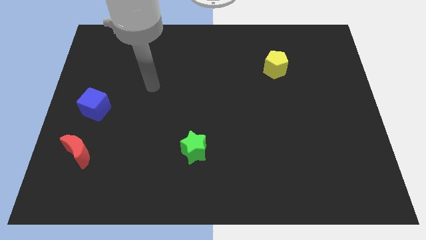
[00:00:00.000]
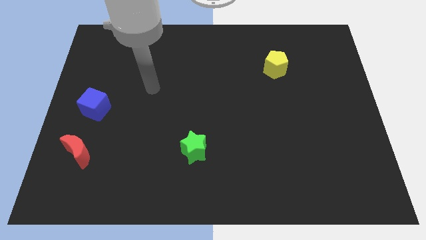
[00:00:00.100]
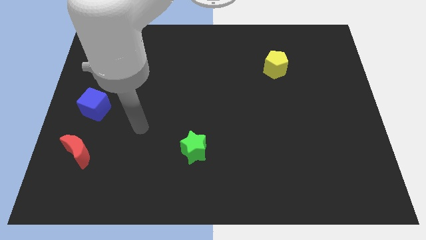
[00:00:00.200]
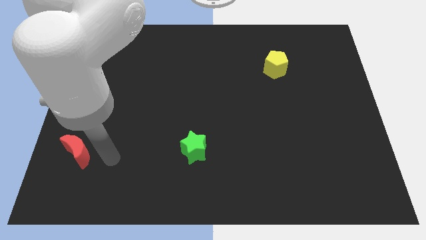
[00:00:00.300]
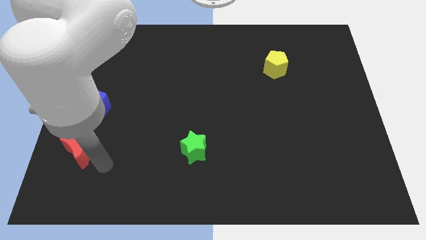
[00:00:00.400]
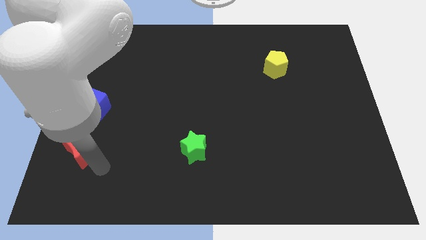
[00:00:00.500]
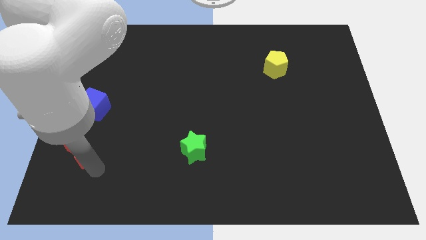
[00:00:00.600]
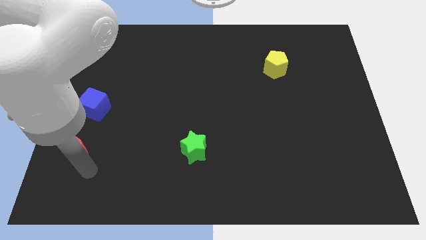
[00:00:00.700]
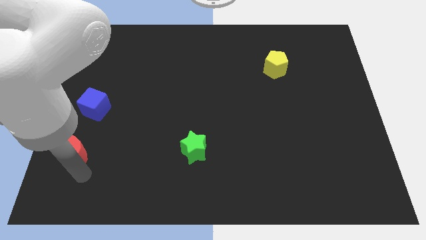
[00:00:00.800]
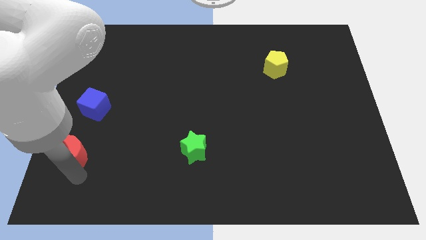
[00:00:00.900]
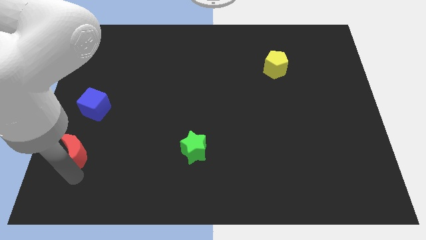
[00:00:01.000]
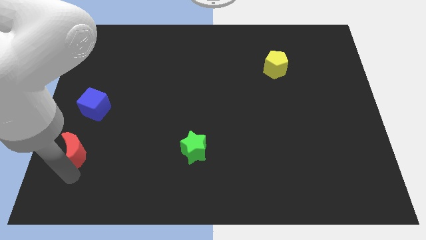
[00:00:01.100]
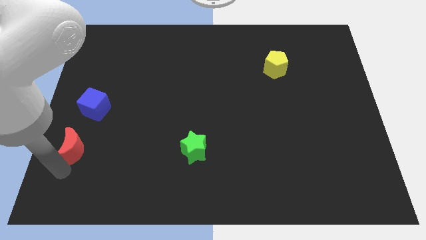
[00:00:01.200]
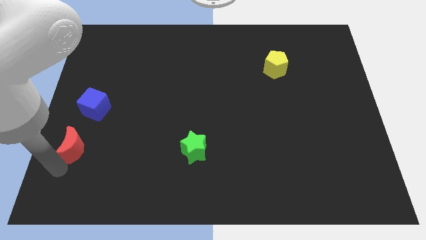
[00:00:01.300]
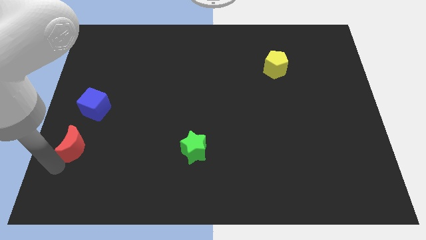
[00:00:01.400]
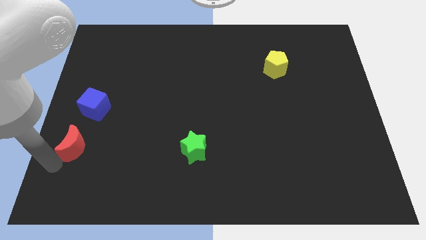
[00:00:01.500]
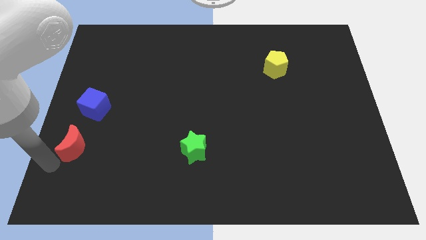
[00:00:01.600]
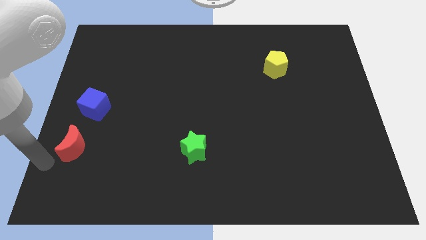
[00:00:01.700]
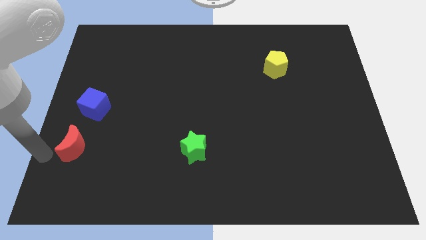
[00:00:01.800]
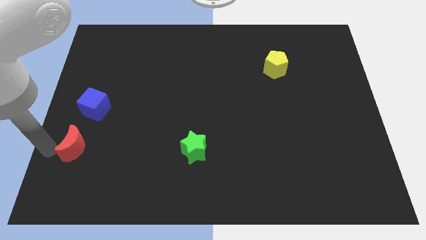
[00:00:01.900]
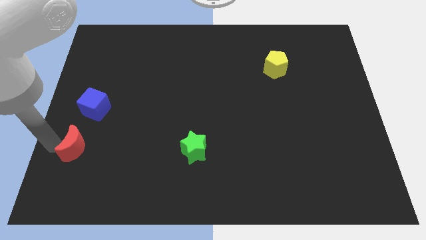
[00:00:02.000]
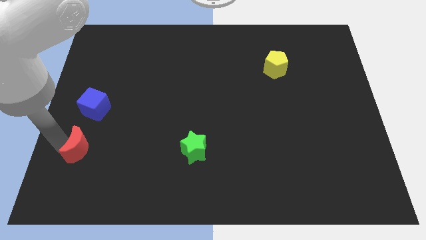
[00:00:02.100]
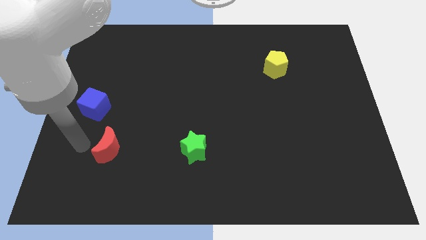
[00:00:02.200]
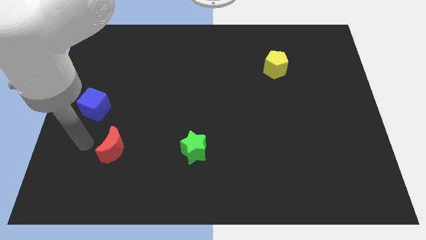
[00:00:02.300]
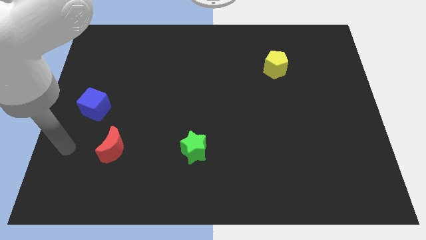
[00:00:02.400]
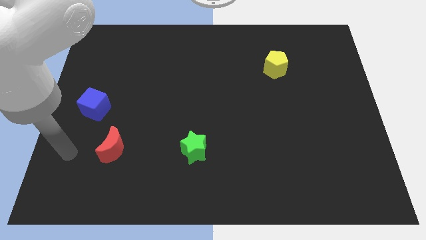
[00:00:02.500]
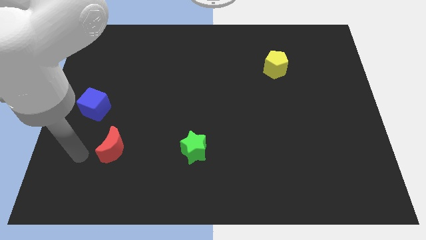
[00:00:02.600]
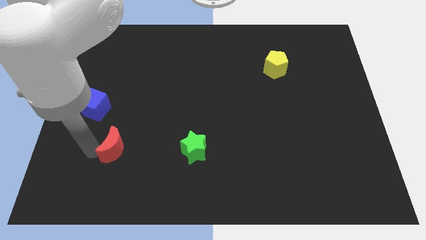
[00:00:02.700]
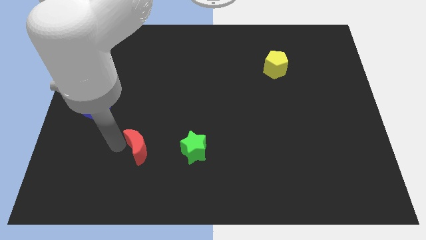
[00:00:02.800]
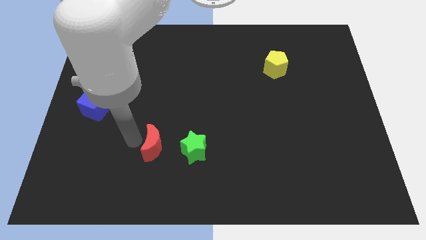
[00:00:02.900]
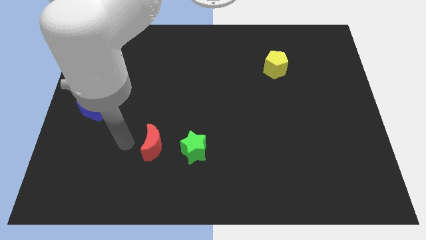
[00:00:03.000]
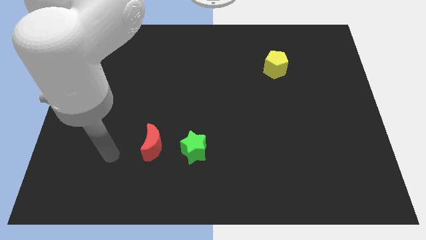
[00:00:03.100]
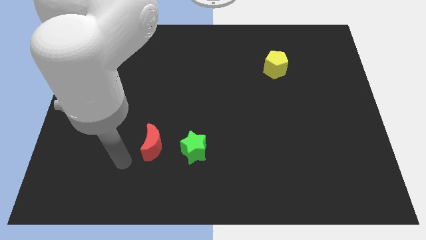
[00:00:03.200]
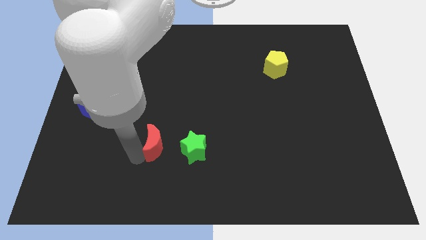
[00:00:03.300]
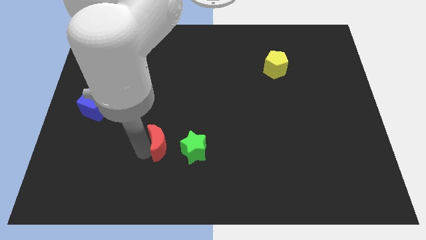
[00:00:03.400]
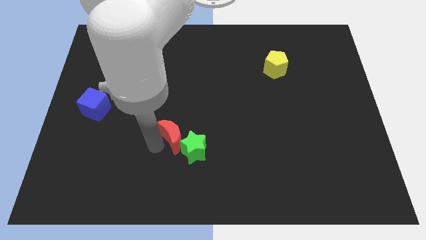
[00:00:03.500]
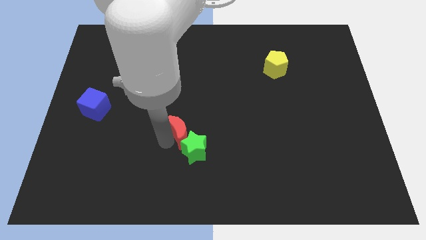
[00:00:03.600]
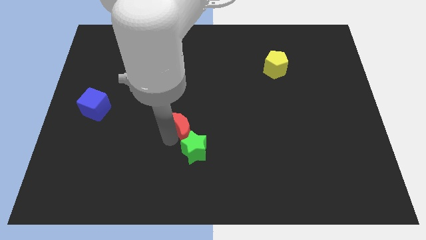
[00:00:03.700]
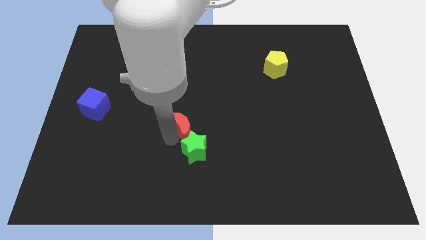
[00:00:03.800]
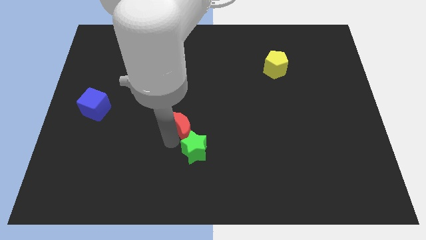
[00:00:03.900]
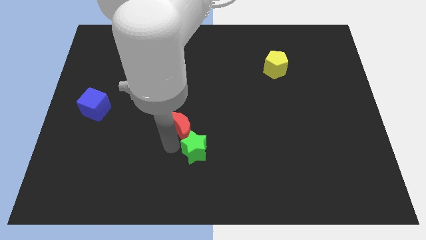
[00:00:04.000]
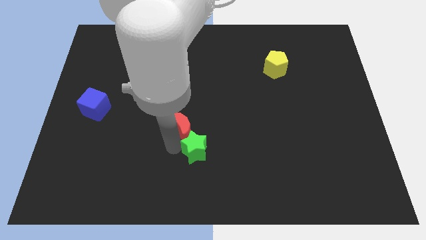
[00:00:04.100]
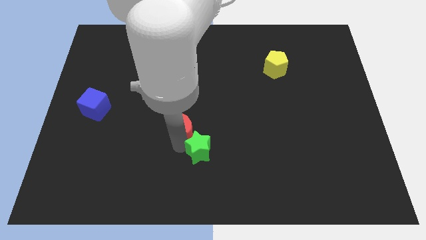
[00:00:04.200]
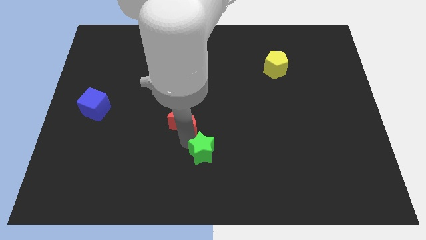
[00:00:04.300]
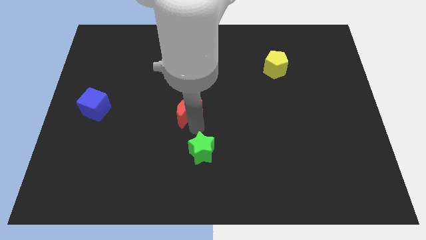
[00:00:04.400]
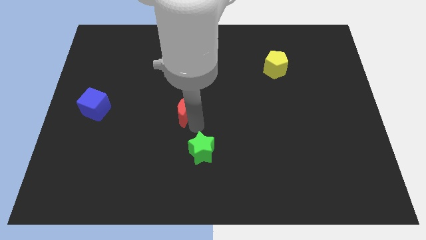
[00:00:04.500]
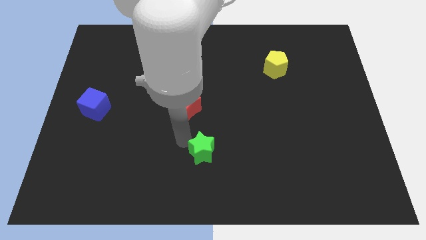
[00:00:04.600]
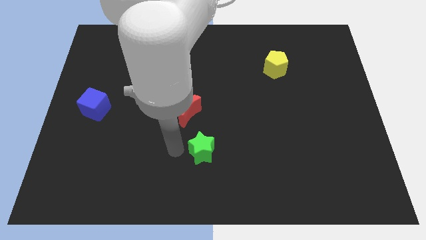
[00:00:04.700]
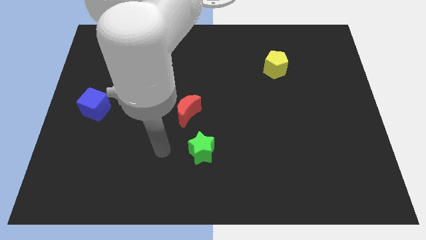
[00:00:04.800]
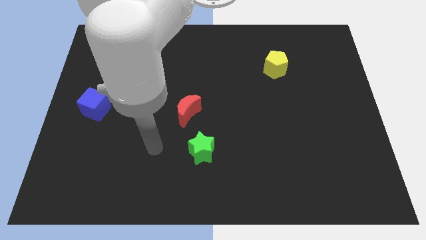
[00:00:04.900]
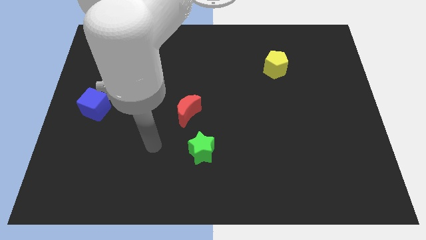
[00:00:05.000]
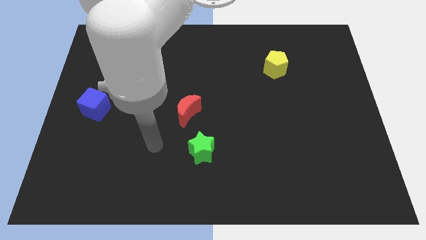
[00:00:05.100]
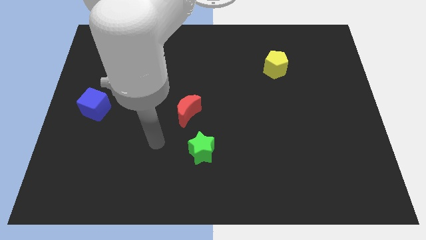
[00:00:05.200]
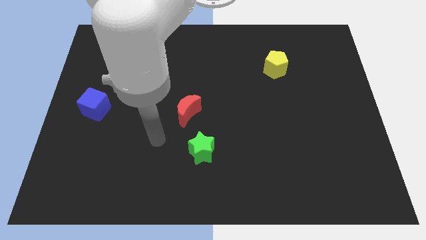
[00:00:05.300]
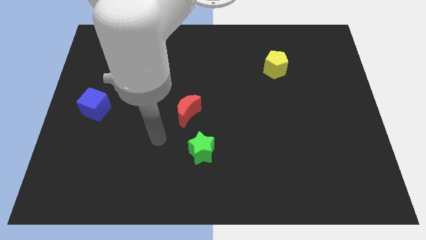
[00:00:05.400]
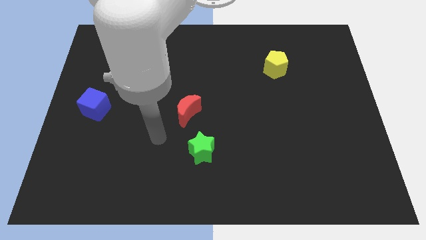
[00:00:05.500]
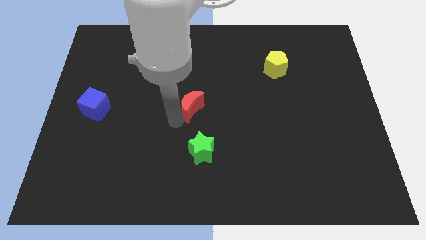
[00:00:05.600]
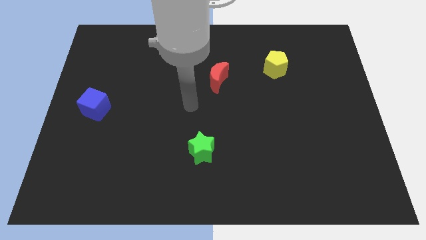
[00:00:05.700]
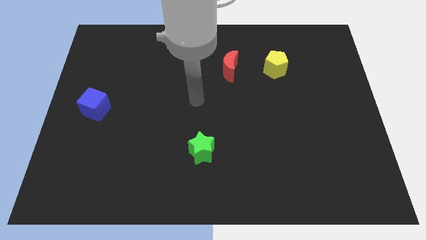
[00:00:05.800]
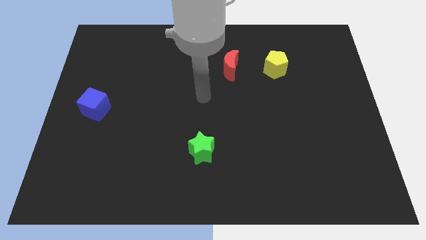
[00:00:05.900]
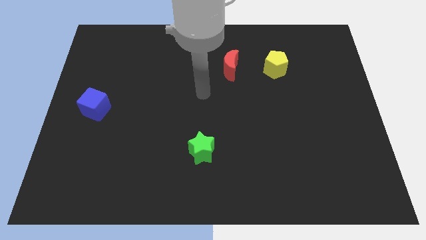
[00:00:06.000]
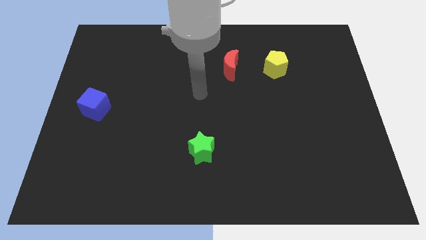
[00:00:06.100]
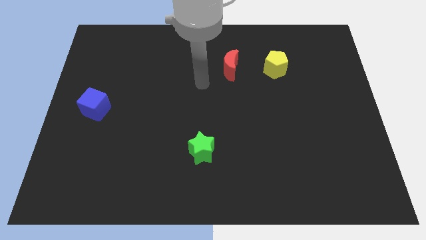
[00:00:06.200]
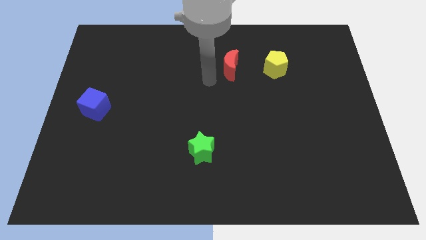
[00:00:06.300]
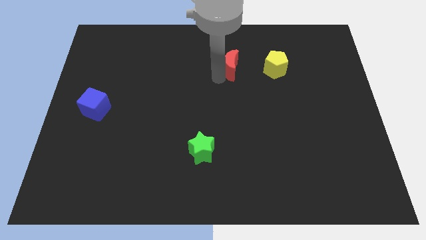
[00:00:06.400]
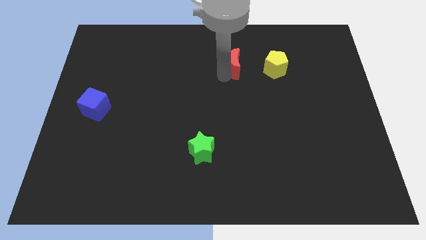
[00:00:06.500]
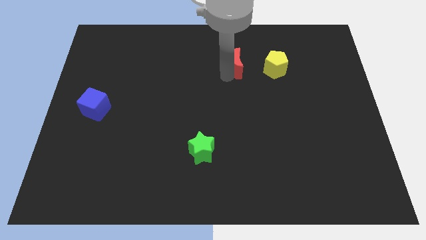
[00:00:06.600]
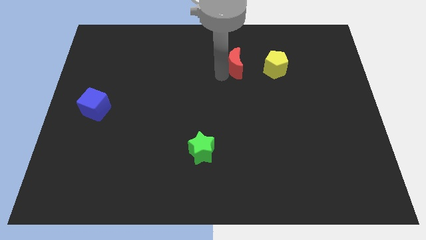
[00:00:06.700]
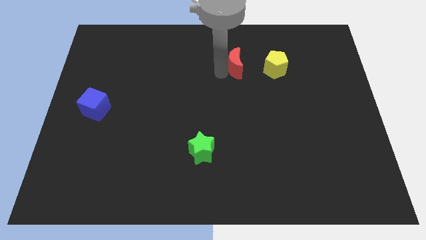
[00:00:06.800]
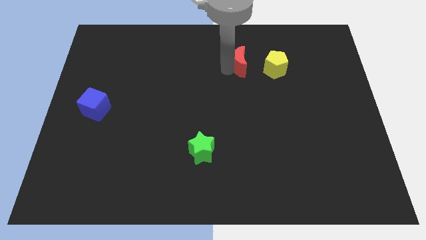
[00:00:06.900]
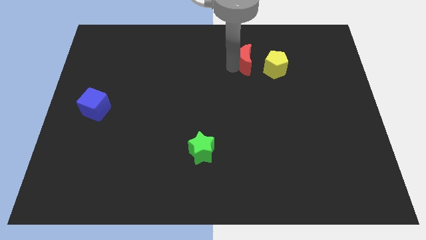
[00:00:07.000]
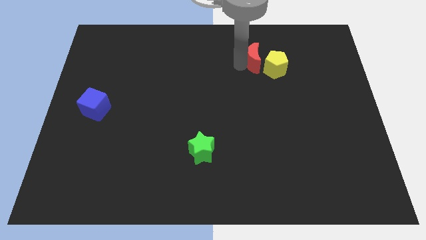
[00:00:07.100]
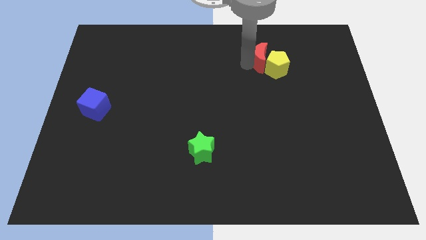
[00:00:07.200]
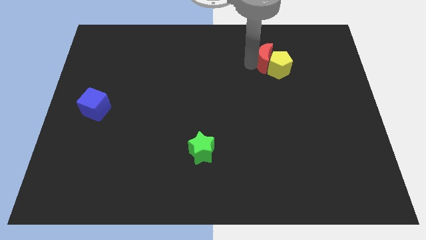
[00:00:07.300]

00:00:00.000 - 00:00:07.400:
push the moon next to the yellow block

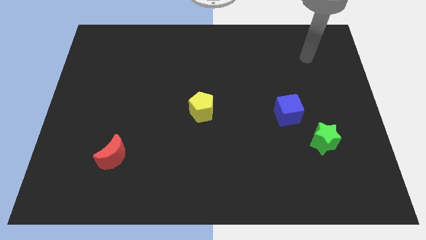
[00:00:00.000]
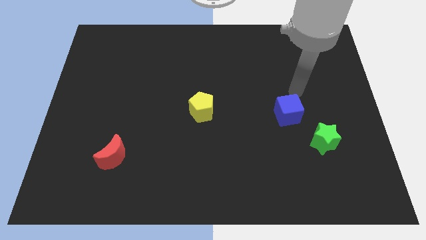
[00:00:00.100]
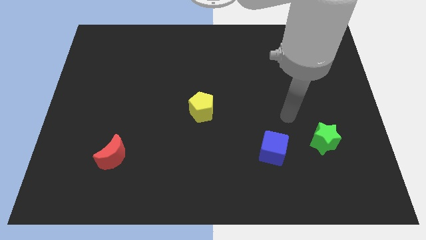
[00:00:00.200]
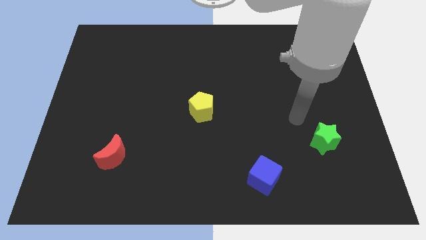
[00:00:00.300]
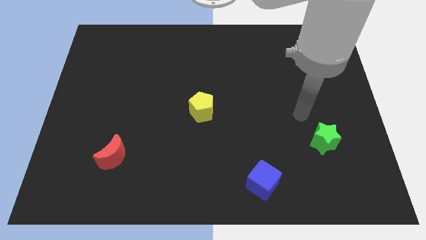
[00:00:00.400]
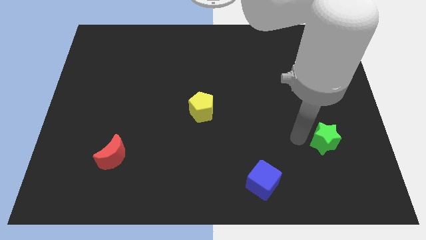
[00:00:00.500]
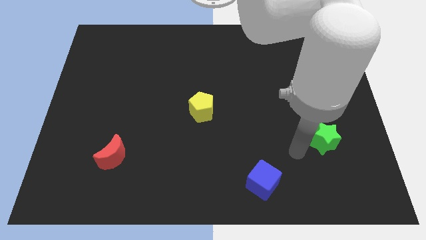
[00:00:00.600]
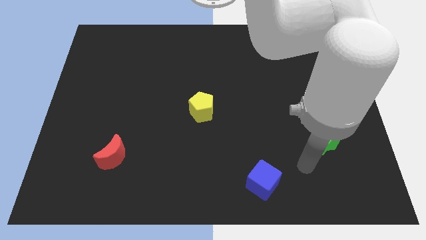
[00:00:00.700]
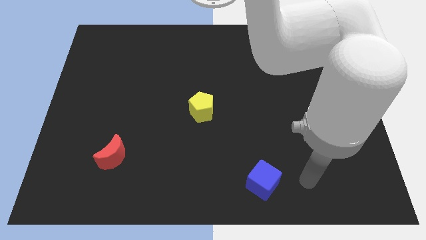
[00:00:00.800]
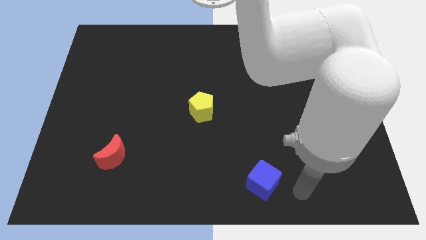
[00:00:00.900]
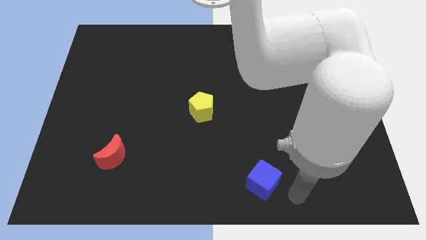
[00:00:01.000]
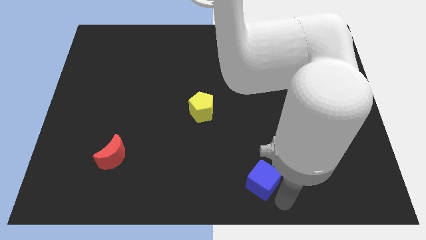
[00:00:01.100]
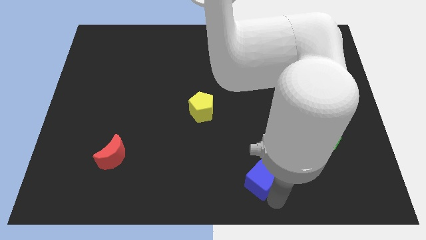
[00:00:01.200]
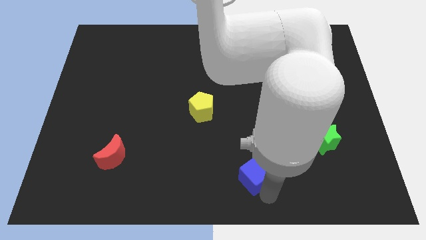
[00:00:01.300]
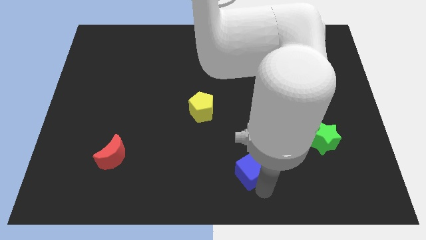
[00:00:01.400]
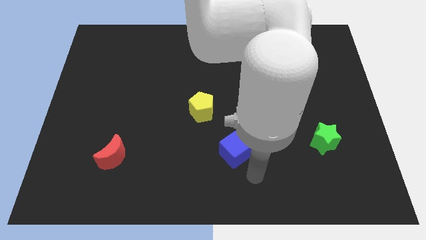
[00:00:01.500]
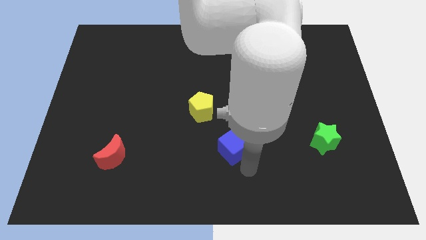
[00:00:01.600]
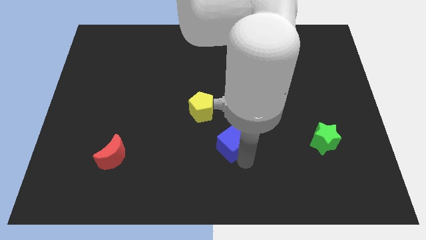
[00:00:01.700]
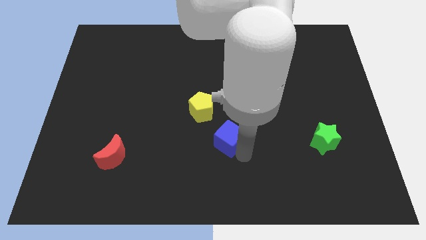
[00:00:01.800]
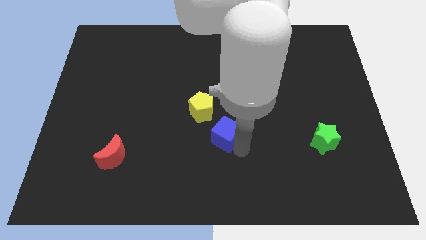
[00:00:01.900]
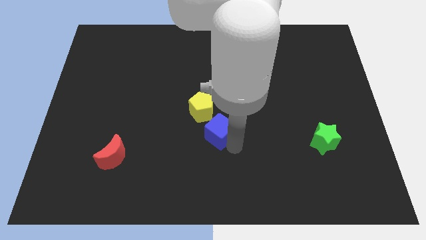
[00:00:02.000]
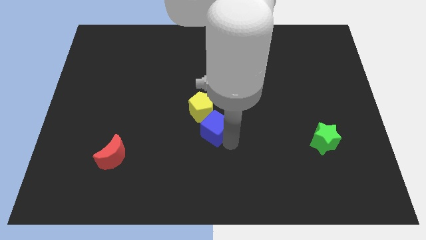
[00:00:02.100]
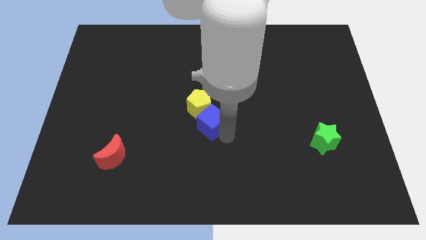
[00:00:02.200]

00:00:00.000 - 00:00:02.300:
move the cube to the yellow block
